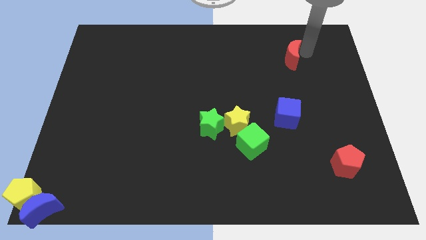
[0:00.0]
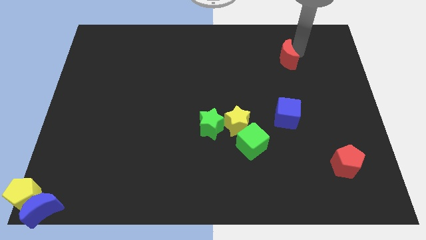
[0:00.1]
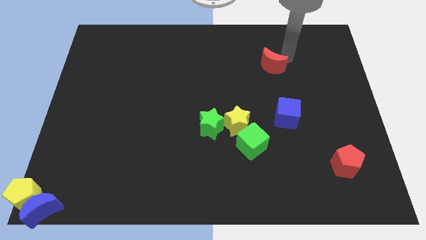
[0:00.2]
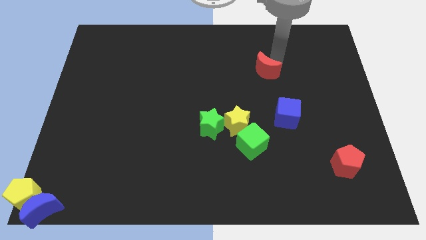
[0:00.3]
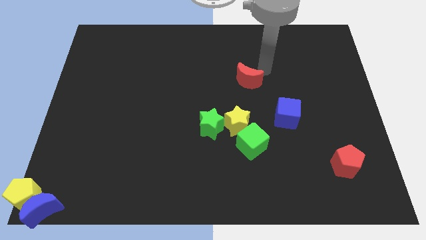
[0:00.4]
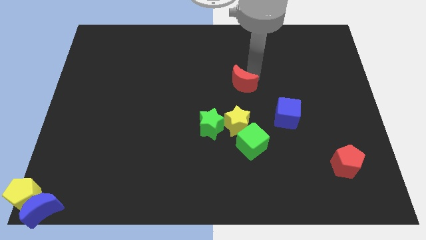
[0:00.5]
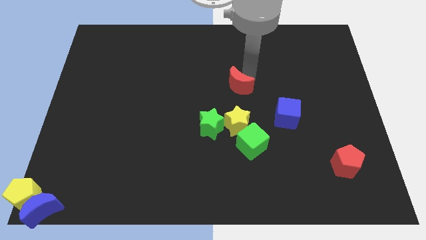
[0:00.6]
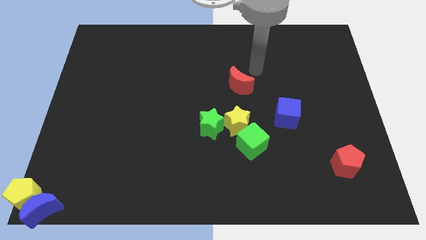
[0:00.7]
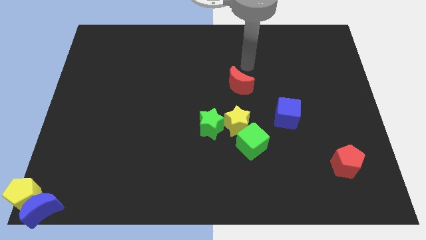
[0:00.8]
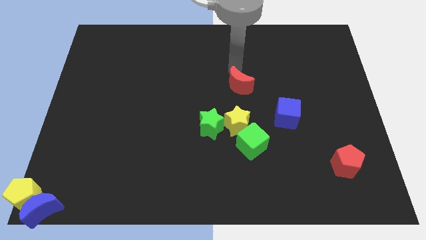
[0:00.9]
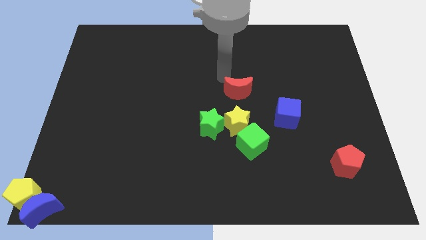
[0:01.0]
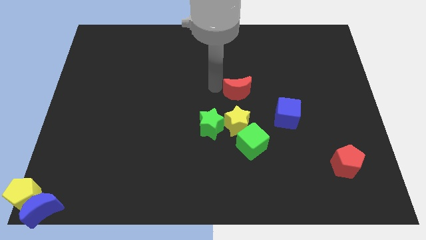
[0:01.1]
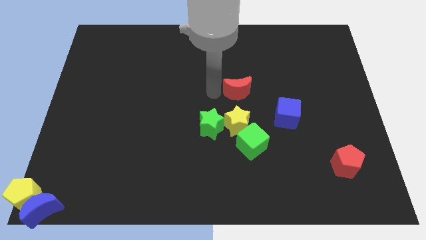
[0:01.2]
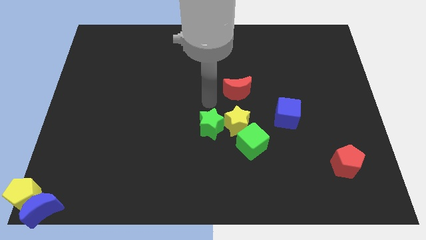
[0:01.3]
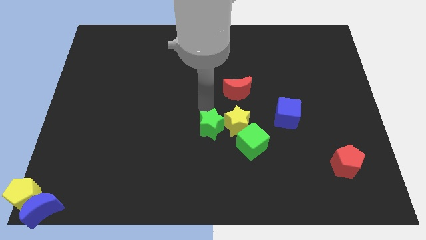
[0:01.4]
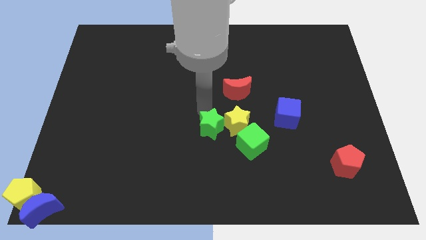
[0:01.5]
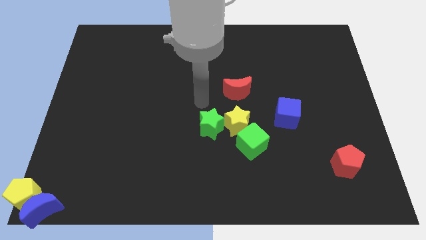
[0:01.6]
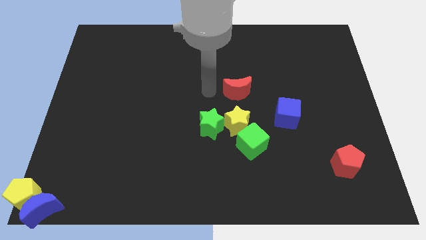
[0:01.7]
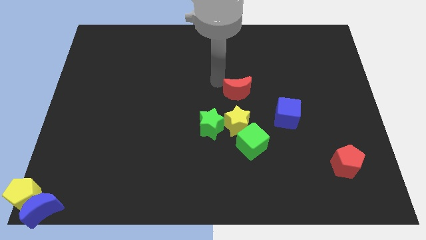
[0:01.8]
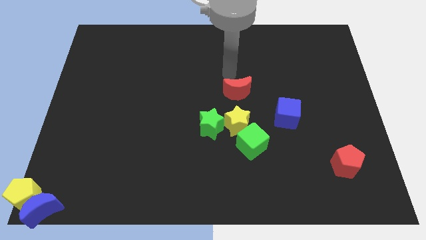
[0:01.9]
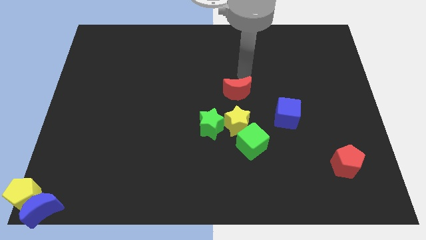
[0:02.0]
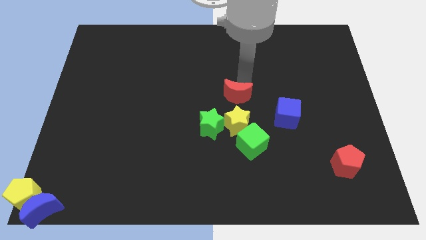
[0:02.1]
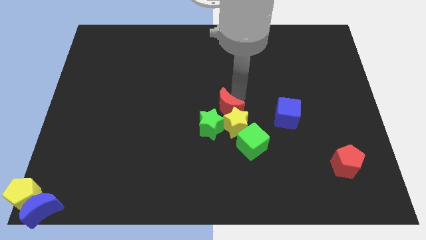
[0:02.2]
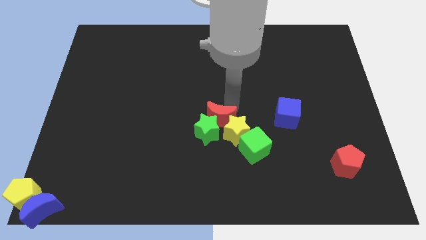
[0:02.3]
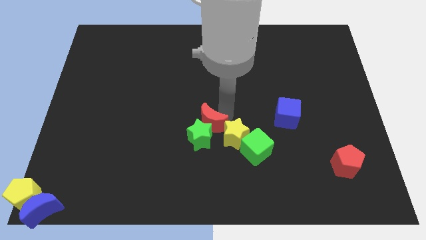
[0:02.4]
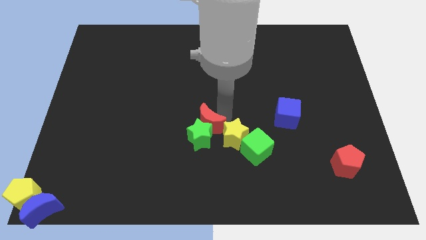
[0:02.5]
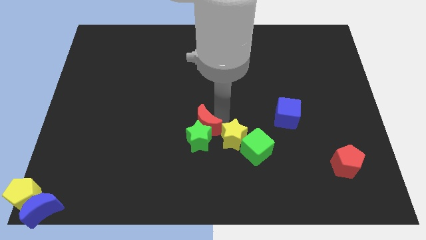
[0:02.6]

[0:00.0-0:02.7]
push the red moon into the top right of the green star

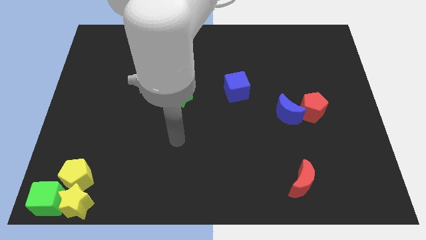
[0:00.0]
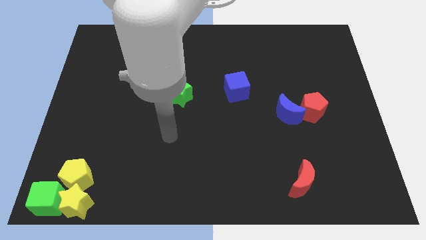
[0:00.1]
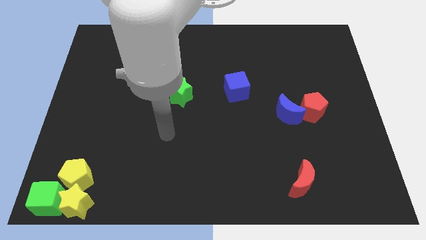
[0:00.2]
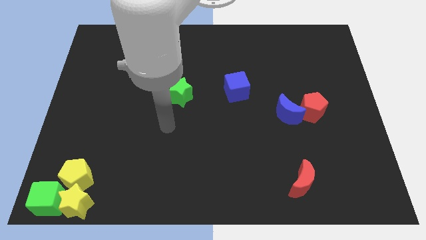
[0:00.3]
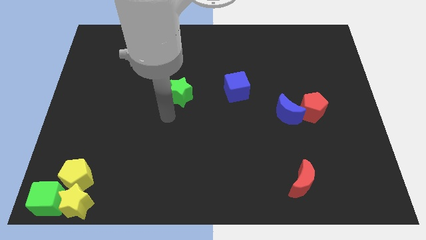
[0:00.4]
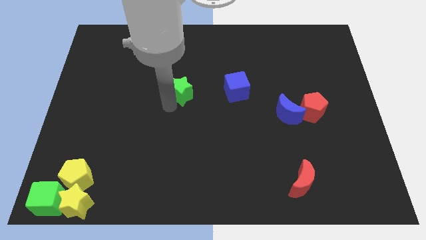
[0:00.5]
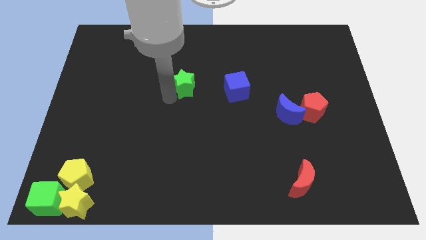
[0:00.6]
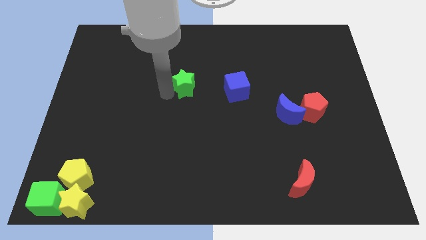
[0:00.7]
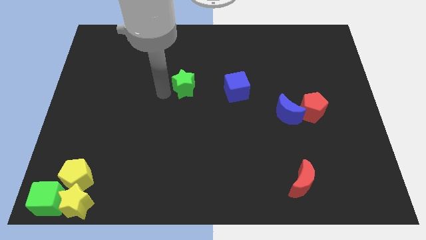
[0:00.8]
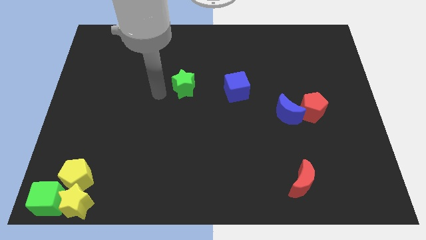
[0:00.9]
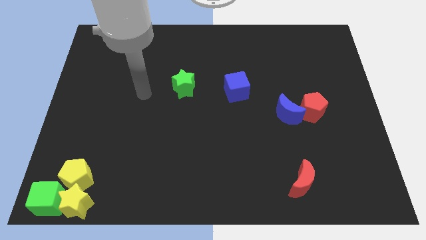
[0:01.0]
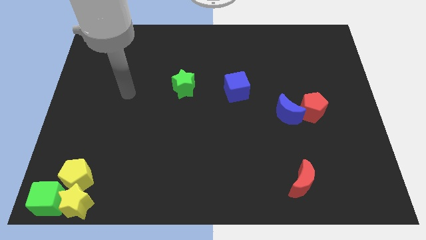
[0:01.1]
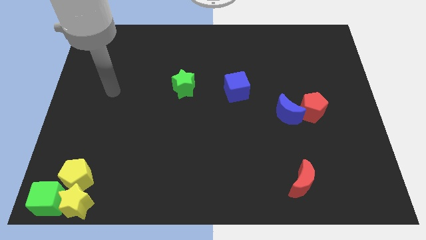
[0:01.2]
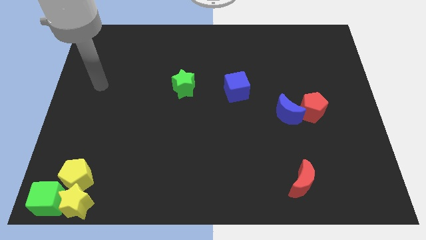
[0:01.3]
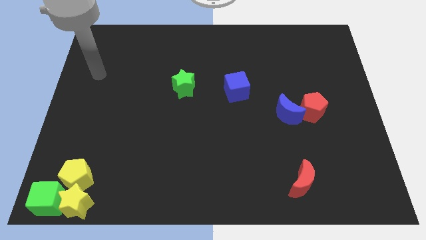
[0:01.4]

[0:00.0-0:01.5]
slightly move the green star to the top of the board

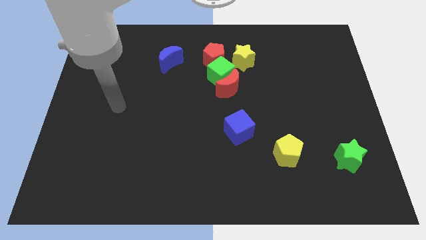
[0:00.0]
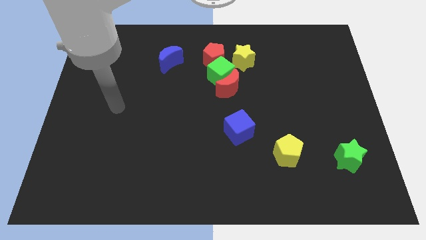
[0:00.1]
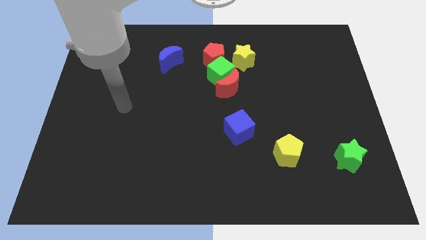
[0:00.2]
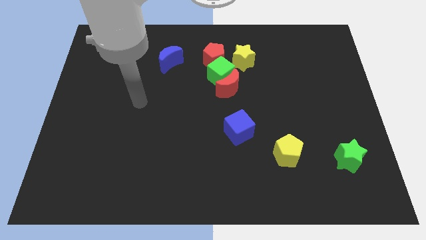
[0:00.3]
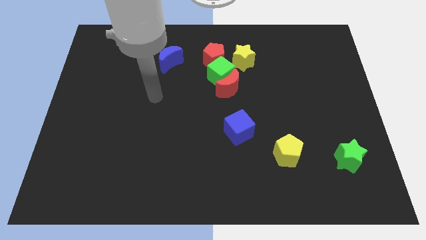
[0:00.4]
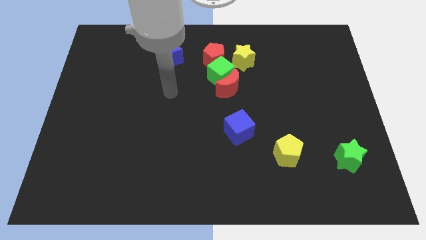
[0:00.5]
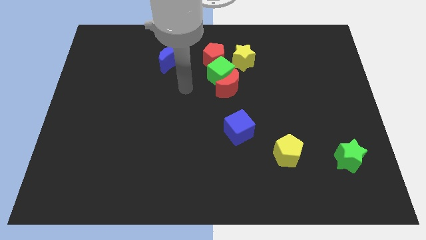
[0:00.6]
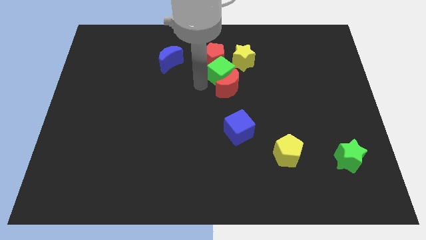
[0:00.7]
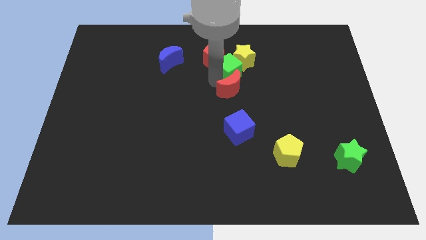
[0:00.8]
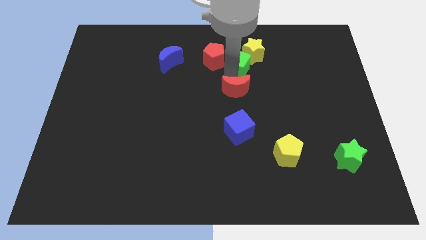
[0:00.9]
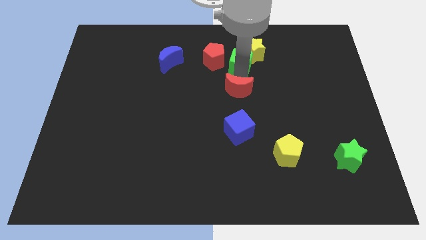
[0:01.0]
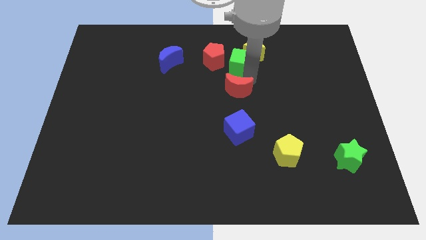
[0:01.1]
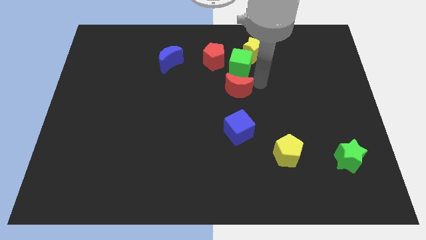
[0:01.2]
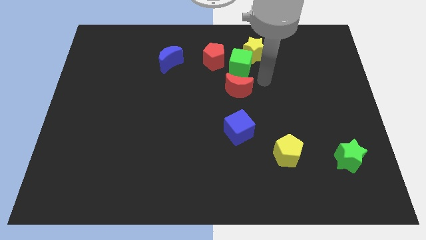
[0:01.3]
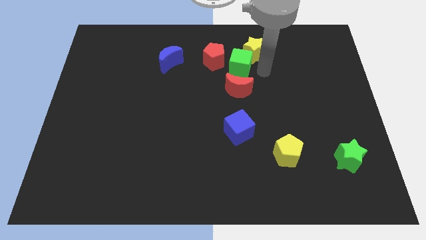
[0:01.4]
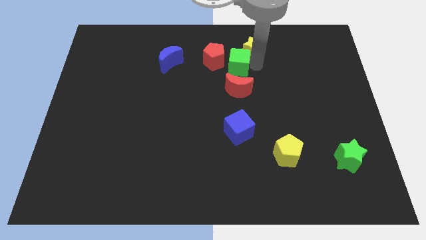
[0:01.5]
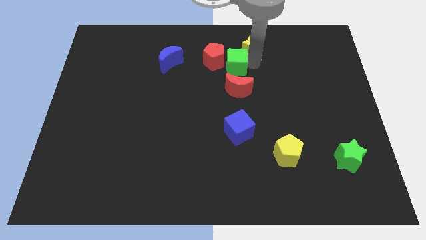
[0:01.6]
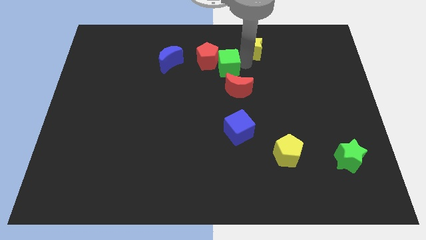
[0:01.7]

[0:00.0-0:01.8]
put your hand to the right of the green cube

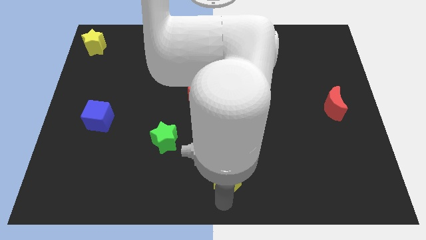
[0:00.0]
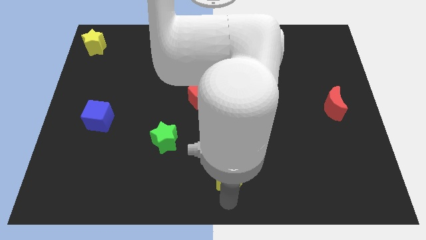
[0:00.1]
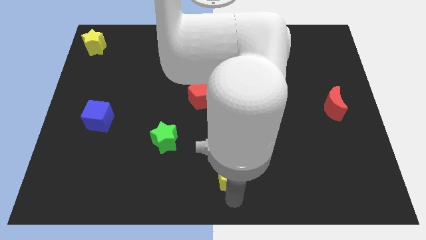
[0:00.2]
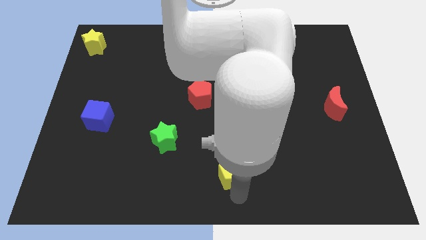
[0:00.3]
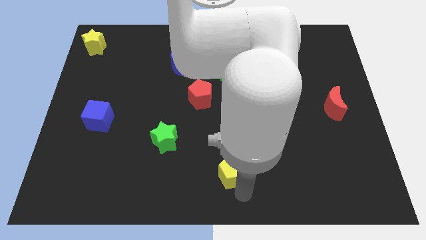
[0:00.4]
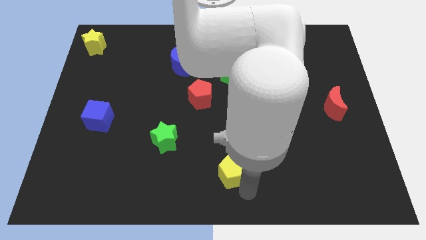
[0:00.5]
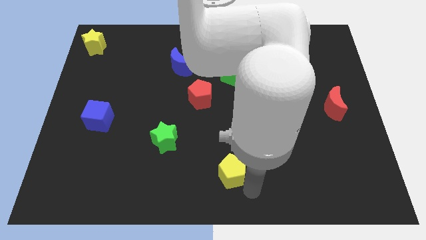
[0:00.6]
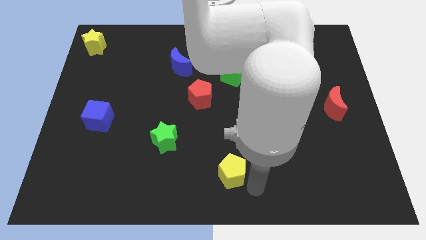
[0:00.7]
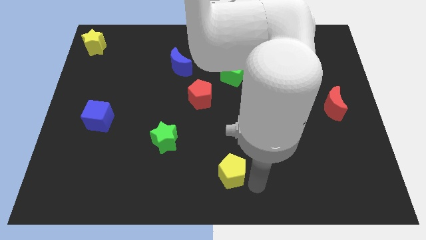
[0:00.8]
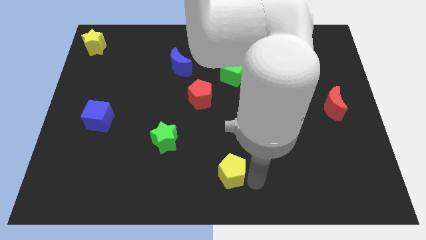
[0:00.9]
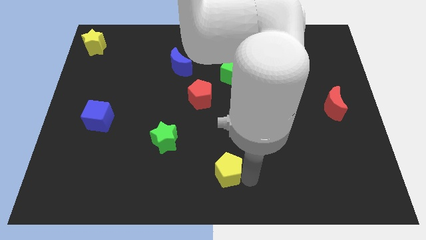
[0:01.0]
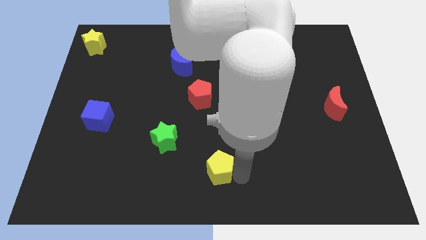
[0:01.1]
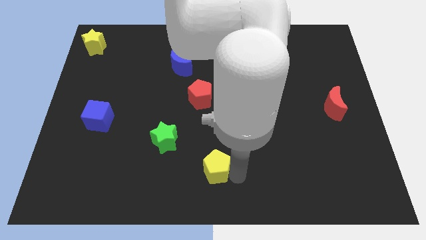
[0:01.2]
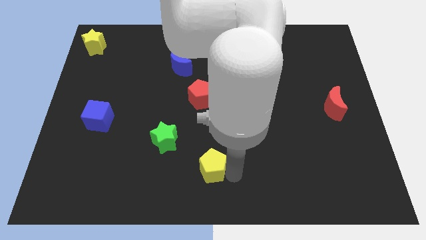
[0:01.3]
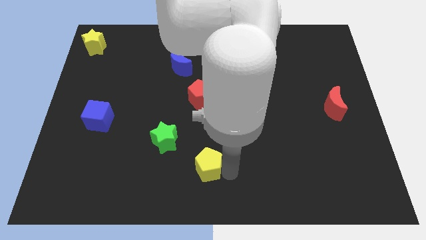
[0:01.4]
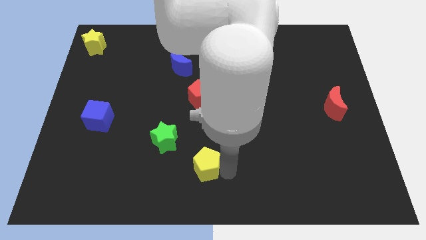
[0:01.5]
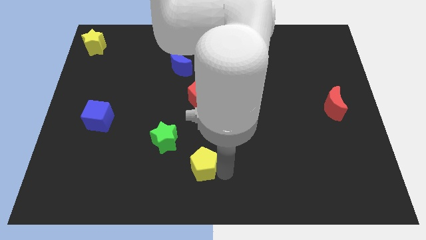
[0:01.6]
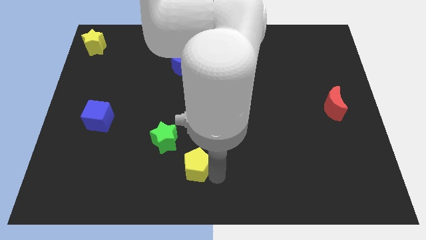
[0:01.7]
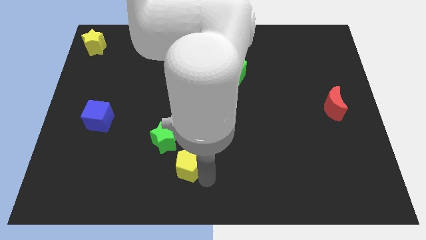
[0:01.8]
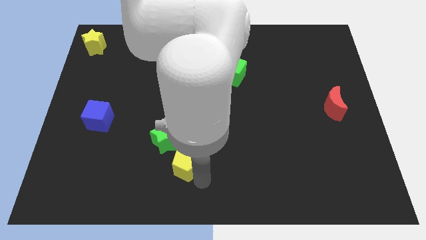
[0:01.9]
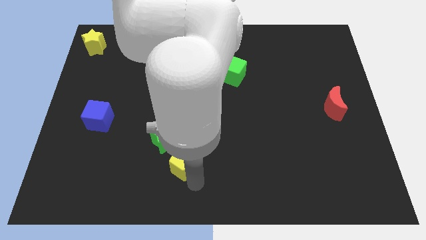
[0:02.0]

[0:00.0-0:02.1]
move the yellow pentagon to the bottom of the green star

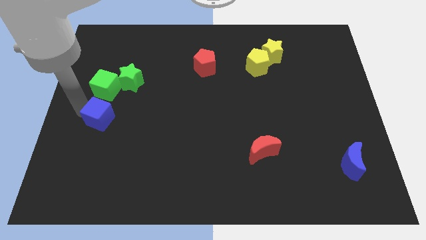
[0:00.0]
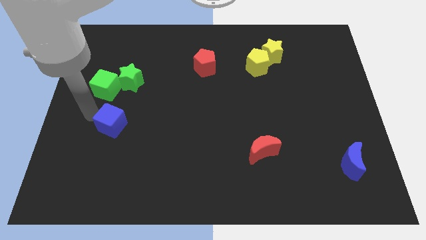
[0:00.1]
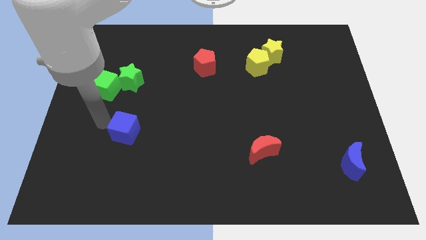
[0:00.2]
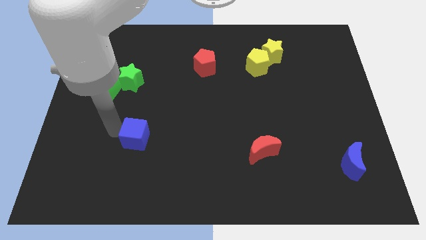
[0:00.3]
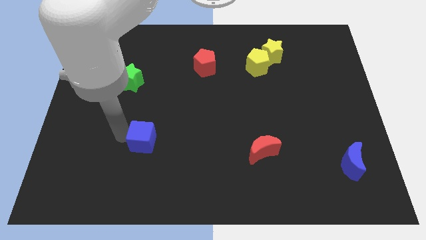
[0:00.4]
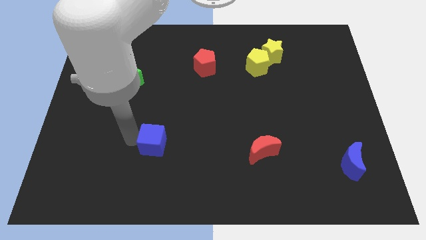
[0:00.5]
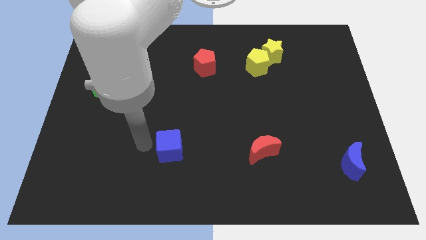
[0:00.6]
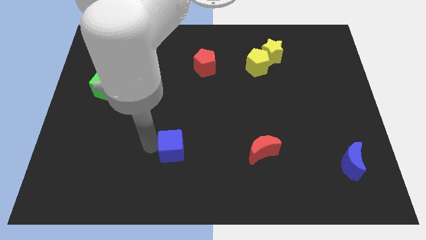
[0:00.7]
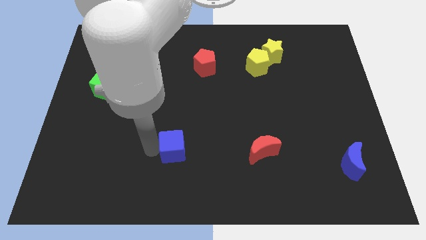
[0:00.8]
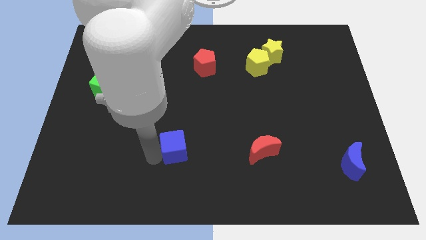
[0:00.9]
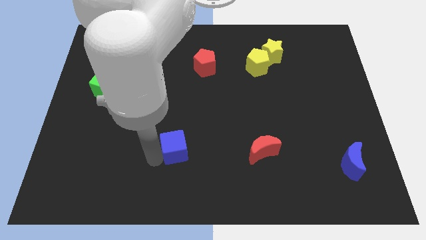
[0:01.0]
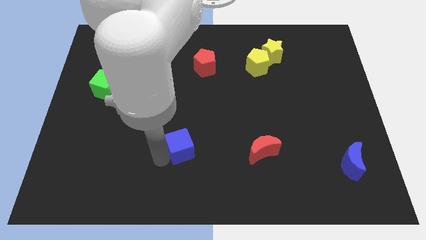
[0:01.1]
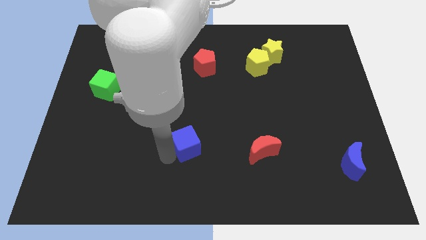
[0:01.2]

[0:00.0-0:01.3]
place blue cube to the left of red moon
